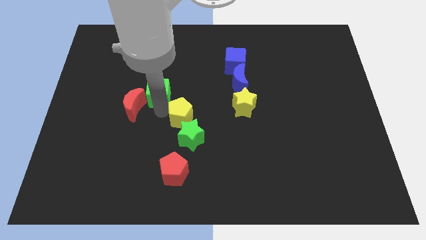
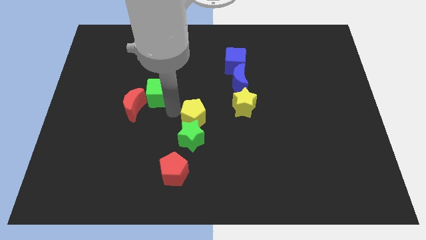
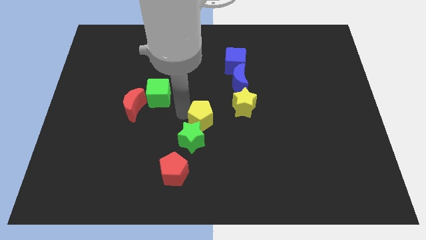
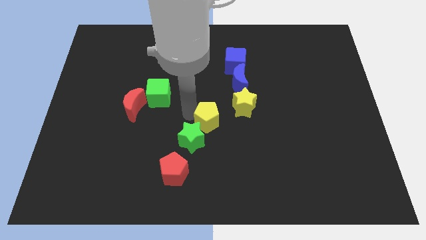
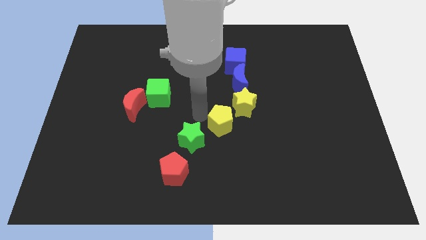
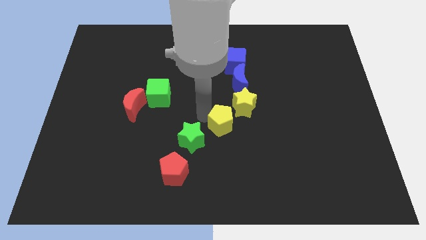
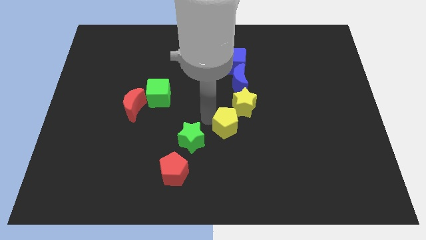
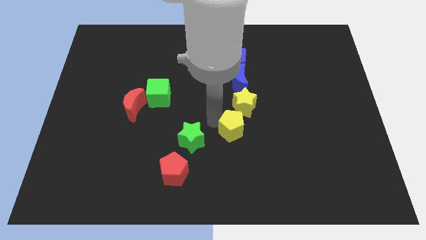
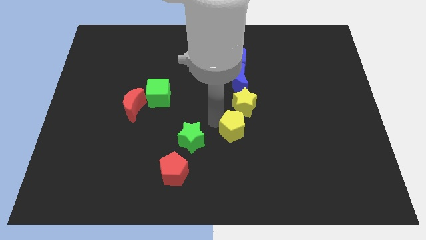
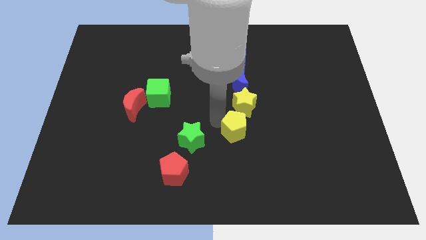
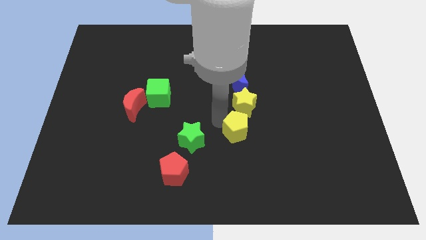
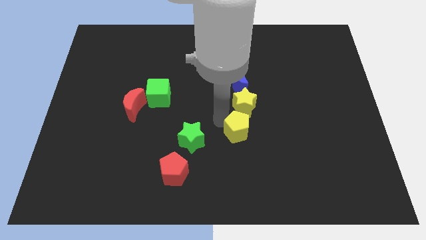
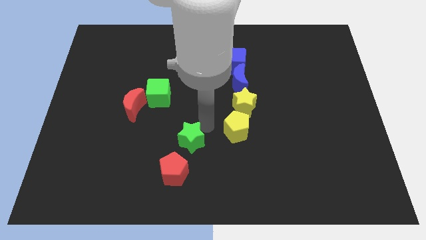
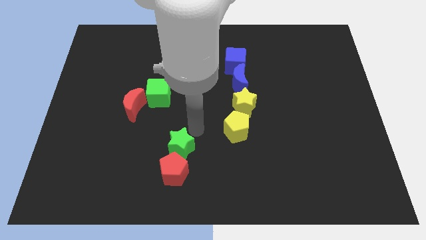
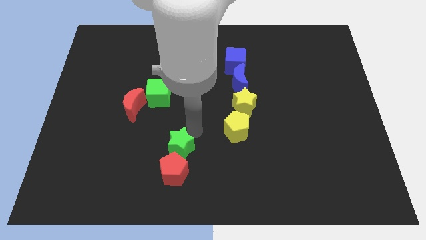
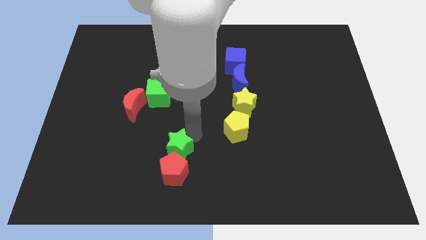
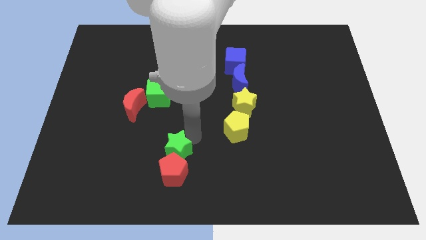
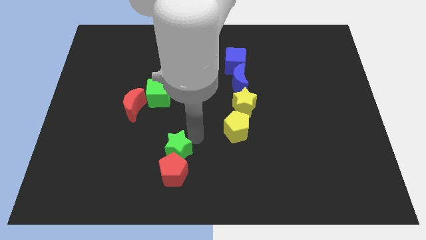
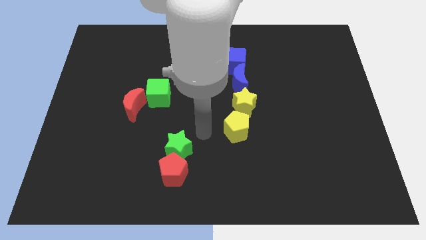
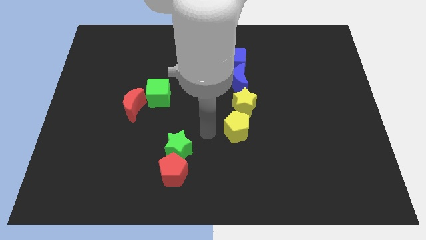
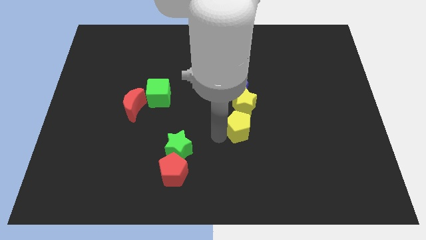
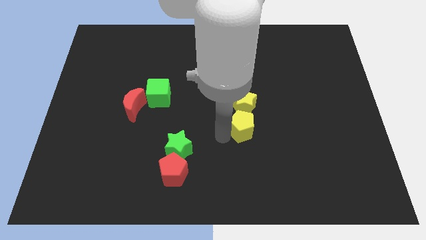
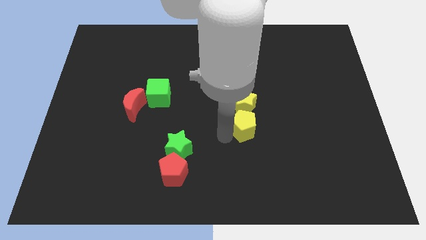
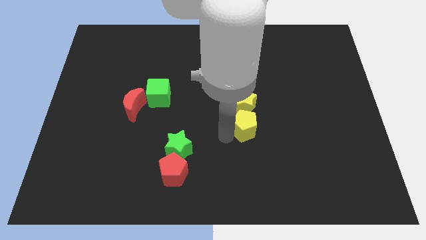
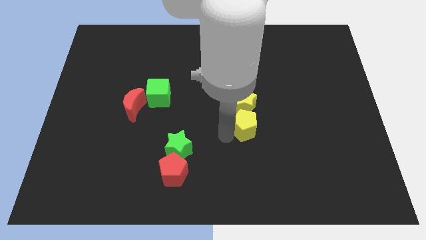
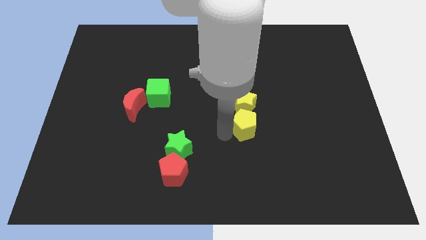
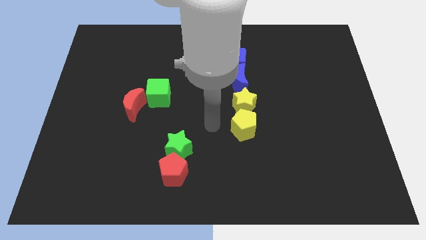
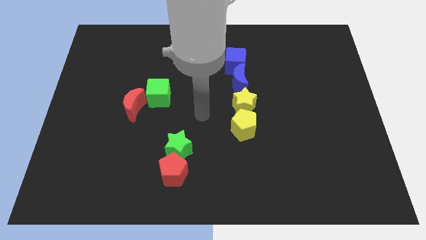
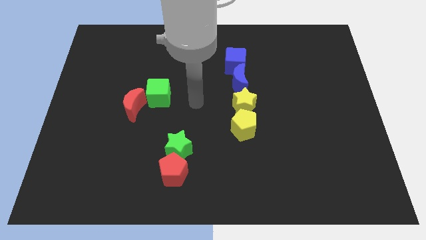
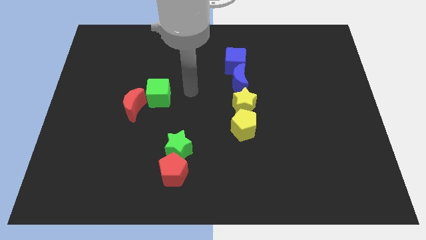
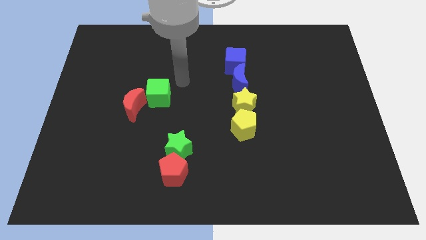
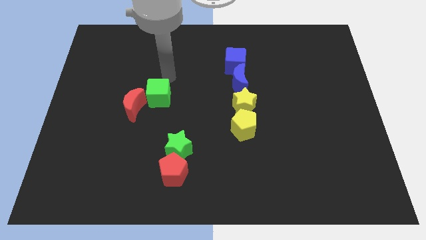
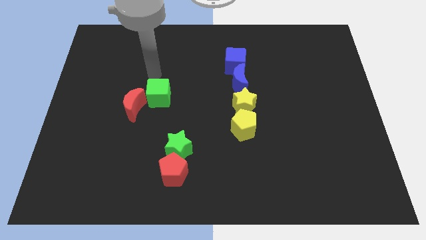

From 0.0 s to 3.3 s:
put the yellow pentagon to the bottom side of the yellow star

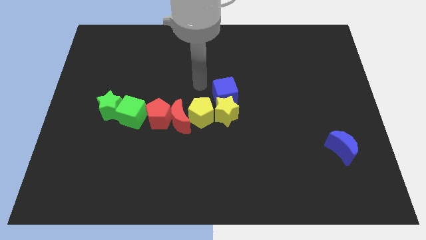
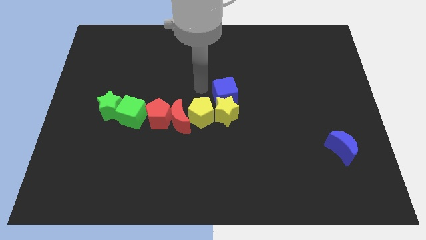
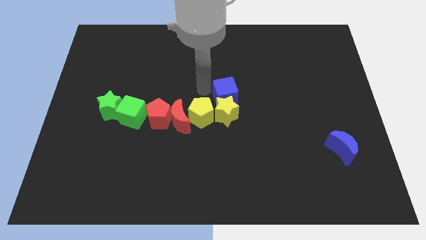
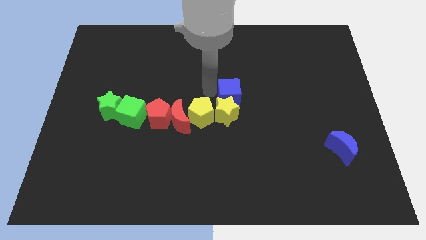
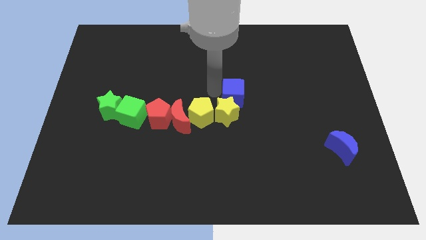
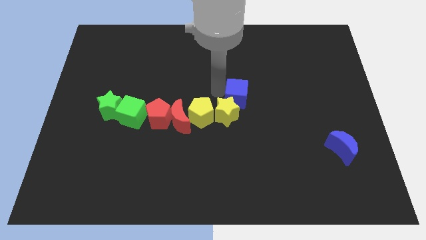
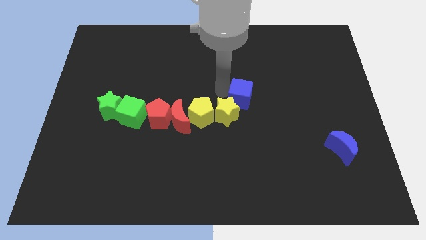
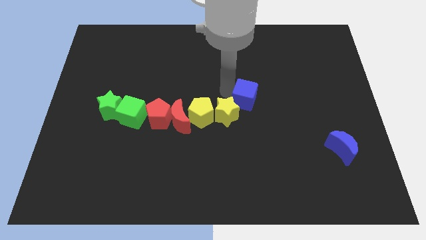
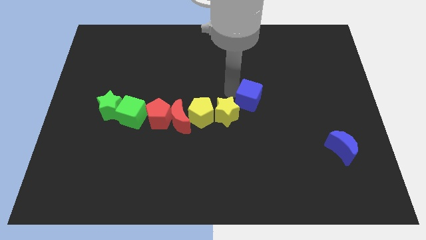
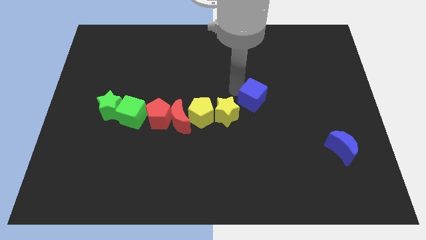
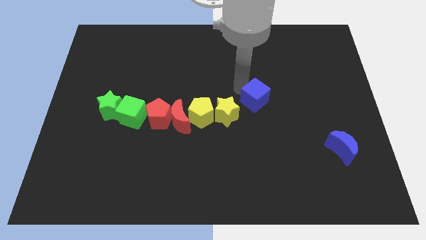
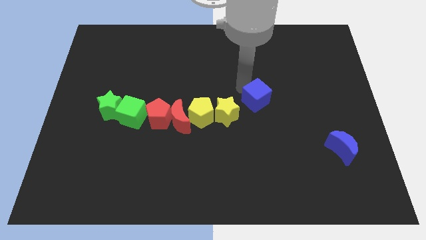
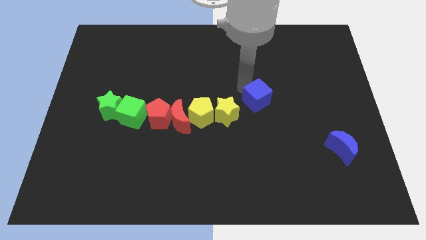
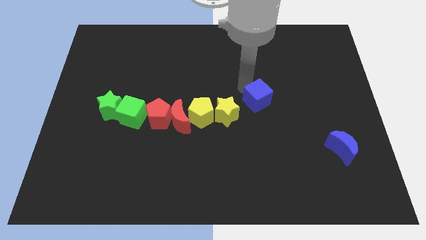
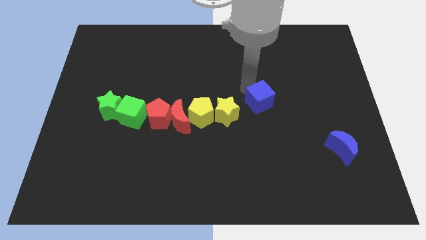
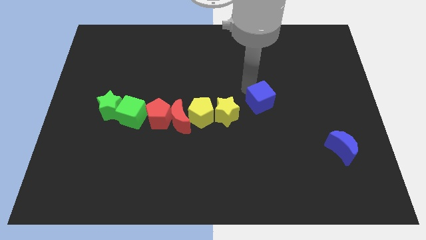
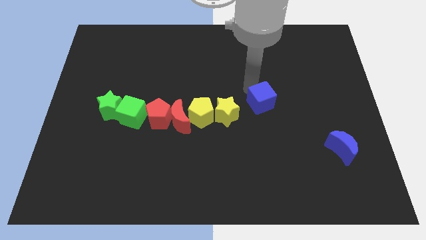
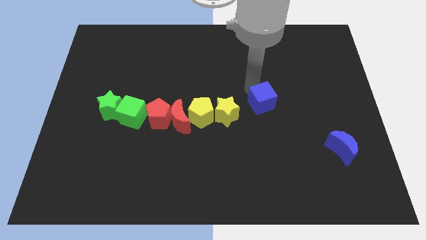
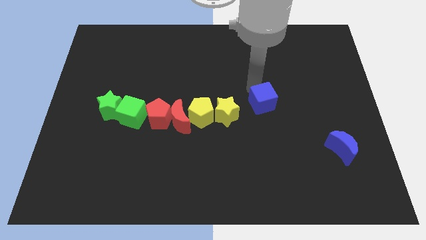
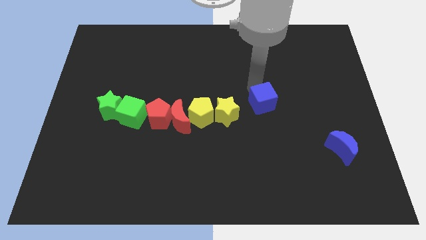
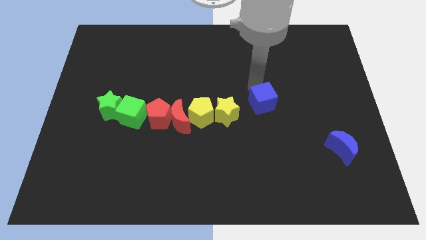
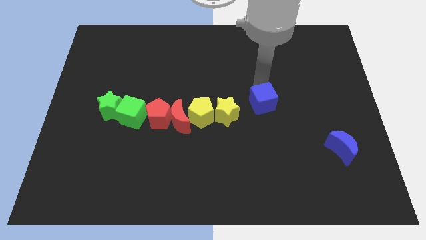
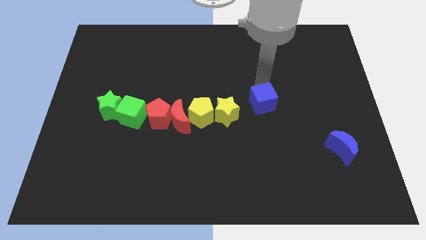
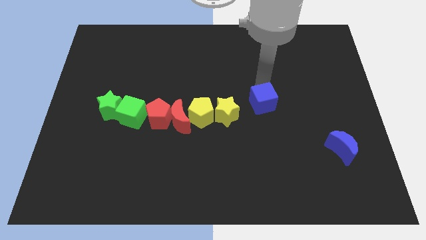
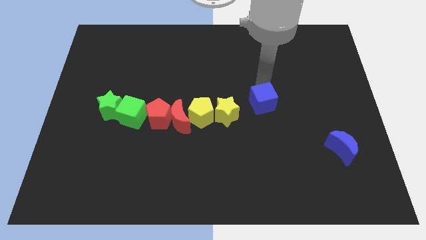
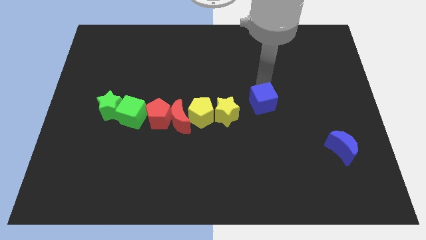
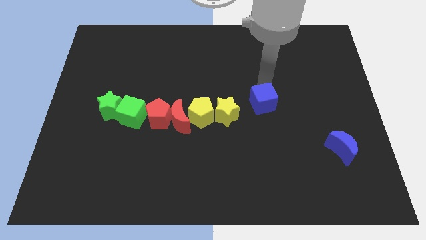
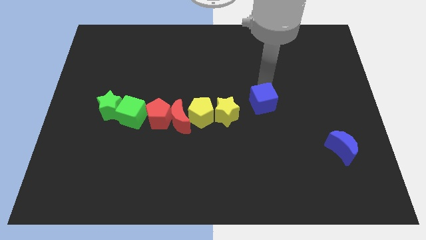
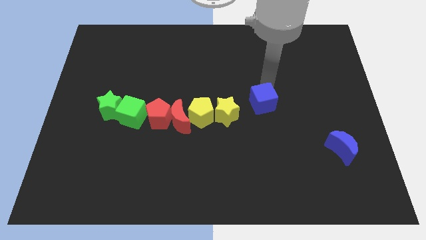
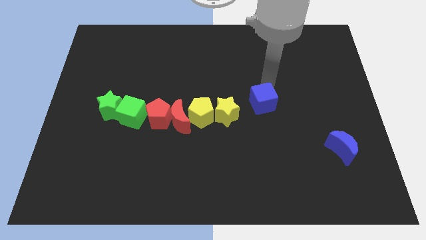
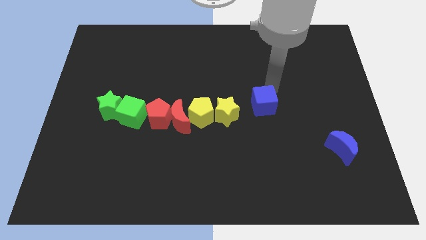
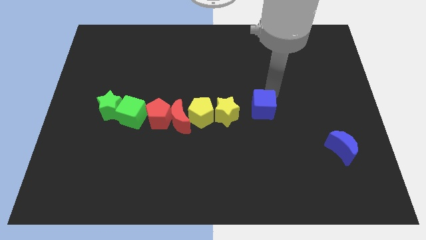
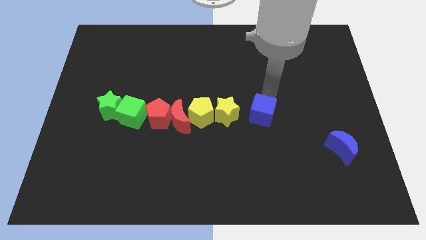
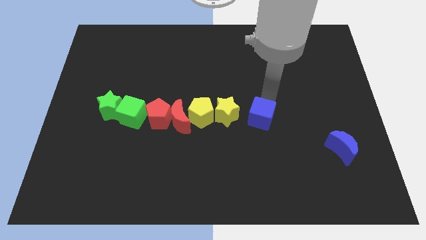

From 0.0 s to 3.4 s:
push blue cube right to the yellow star

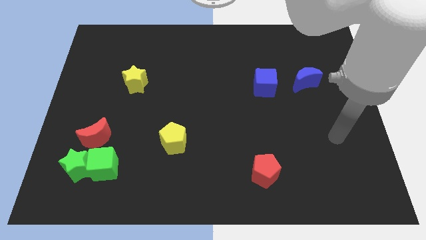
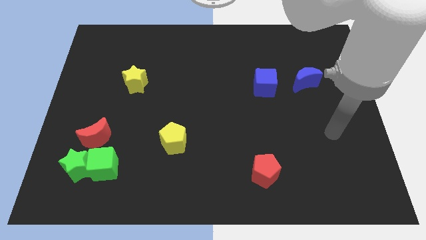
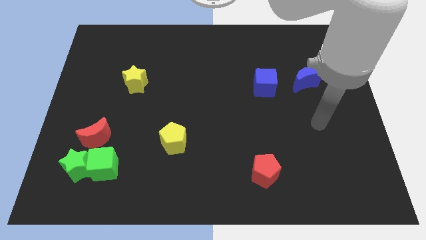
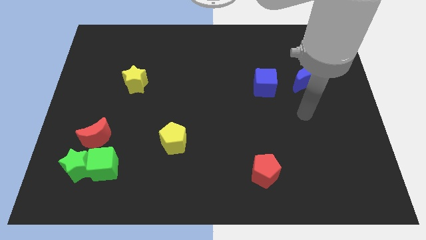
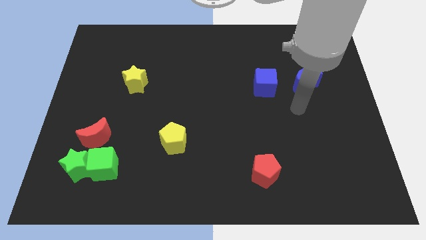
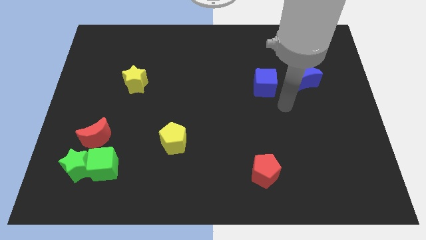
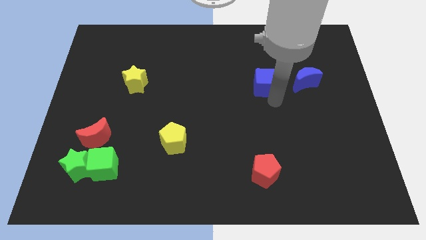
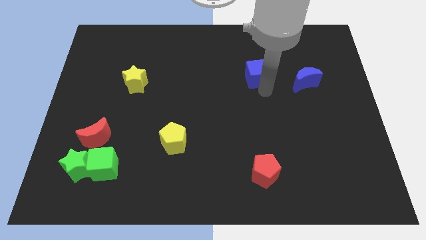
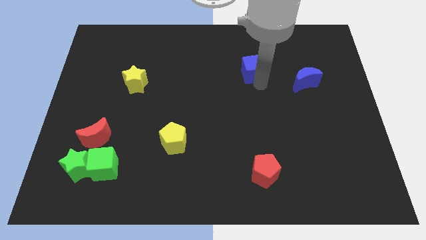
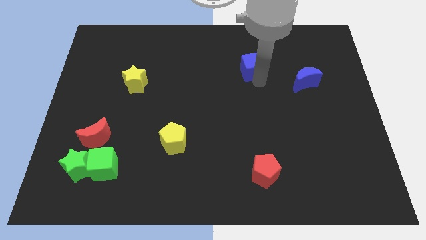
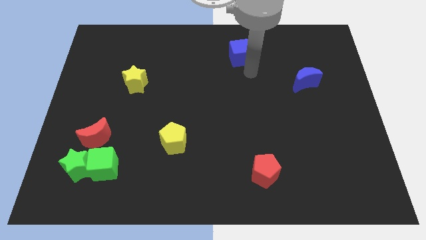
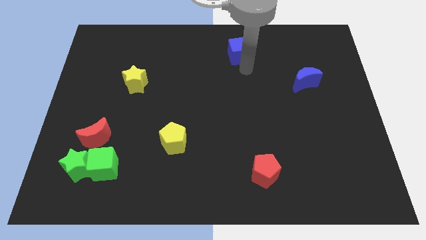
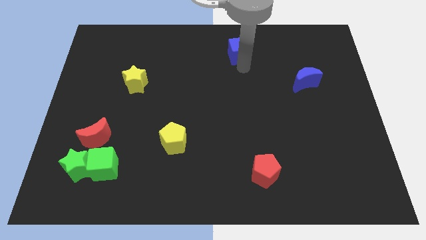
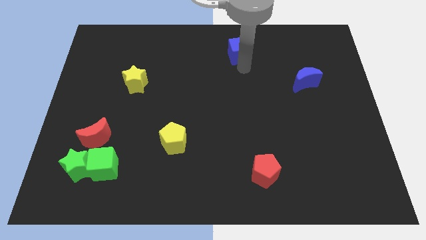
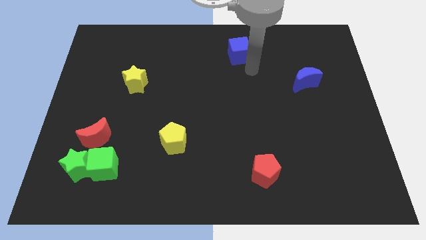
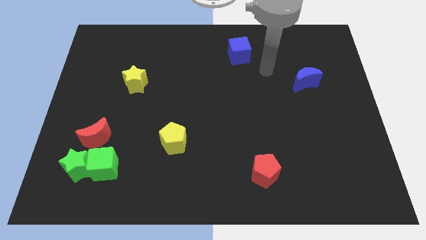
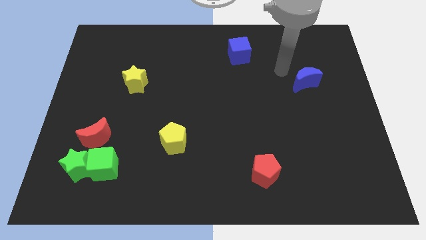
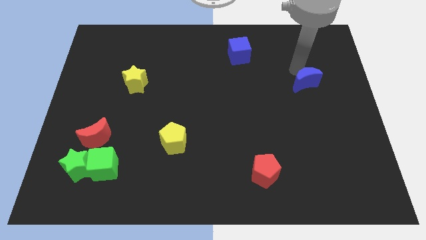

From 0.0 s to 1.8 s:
push the blue cube towards the top center of the board

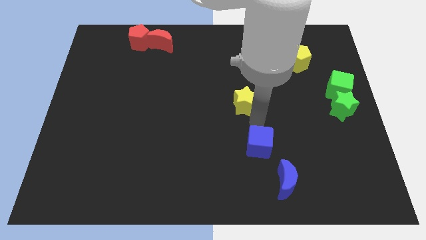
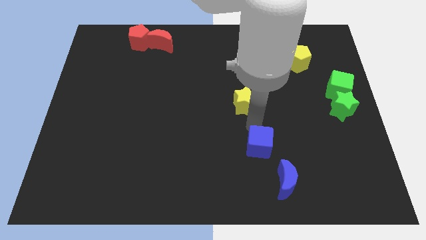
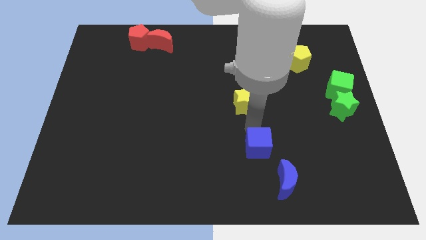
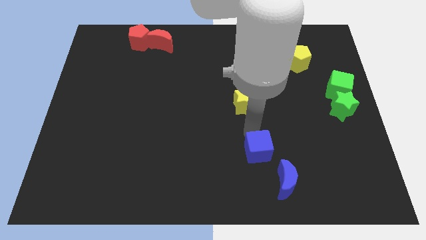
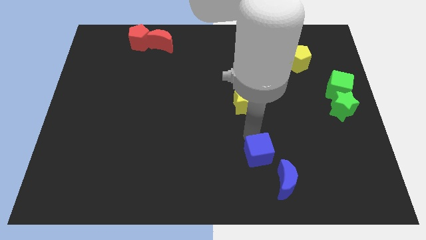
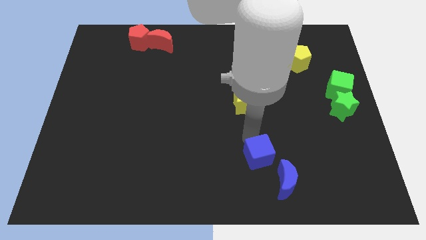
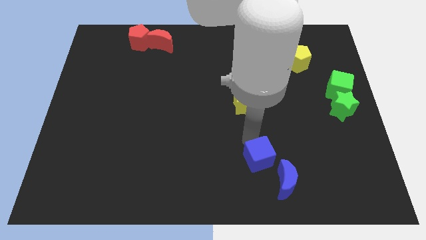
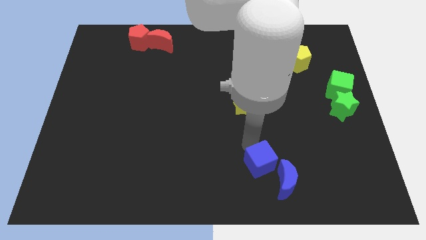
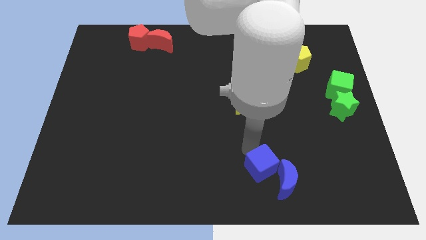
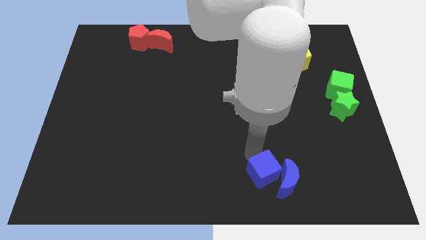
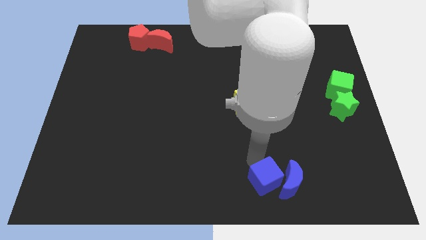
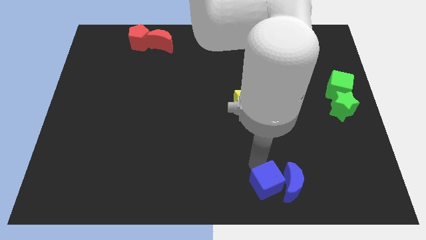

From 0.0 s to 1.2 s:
push the blue cube into the blue crescent
